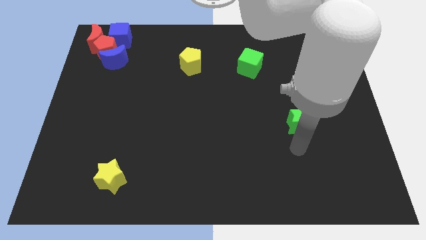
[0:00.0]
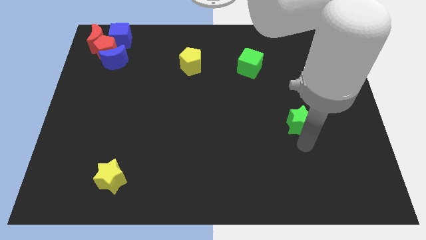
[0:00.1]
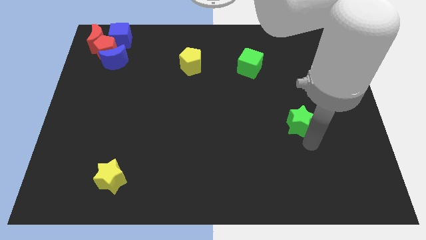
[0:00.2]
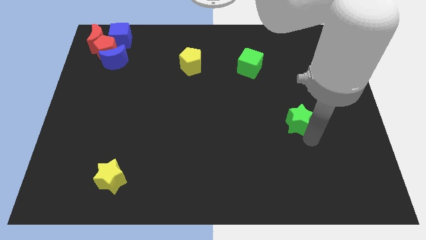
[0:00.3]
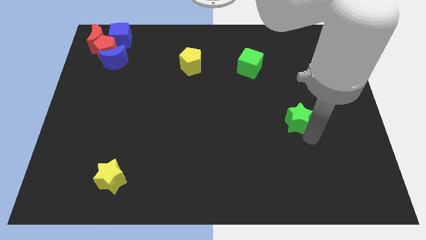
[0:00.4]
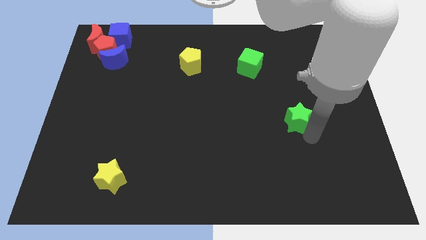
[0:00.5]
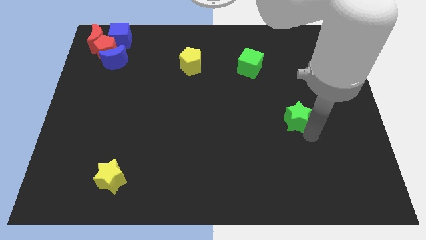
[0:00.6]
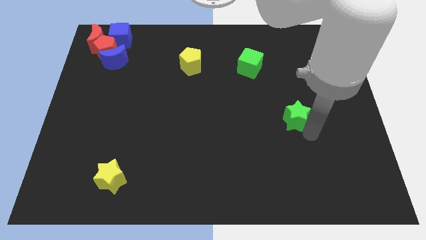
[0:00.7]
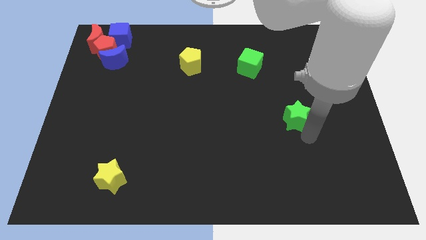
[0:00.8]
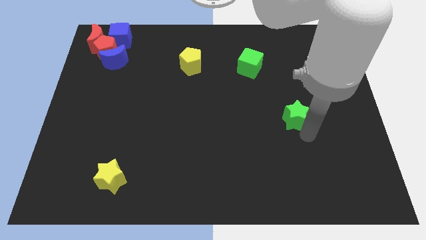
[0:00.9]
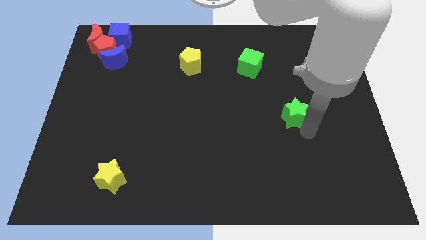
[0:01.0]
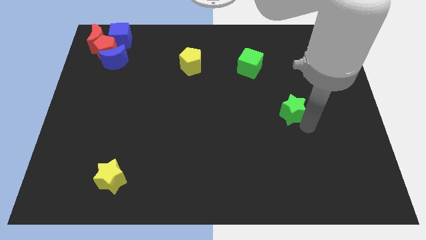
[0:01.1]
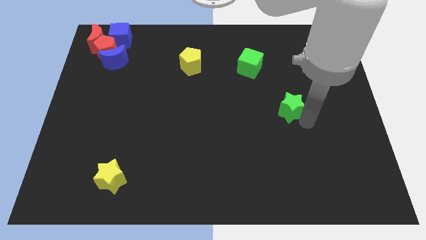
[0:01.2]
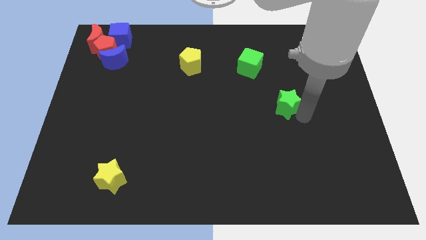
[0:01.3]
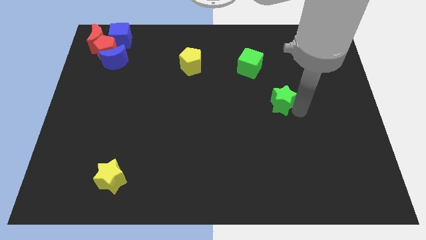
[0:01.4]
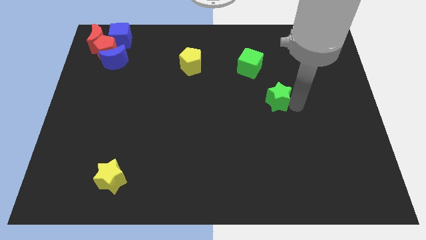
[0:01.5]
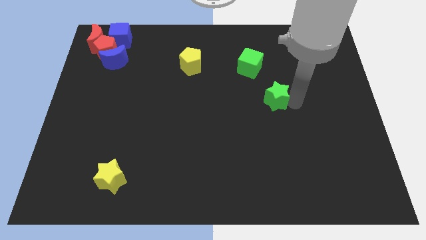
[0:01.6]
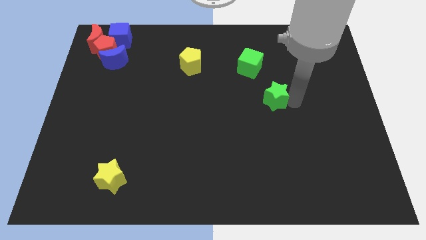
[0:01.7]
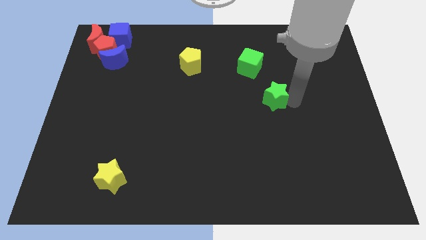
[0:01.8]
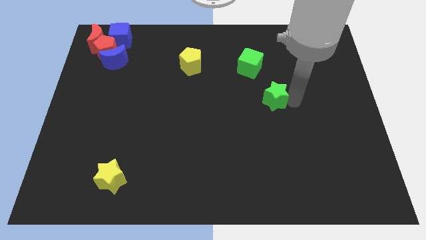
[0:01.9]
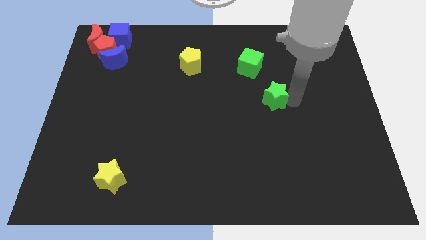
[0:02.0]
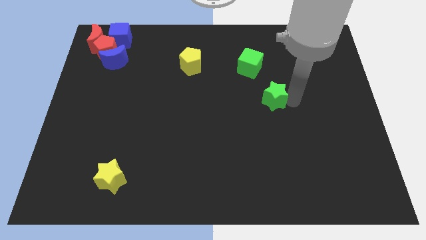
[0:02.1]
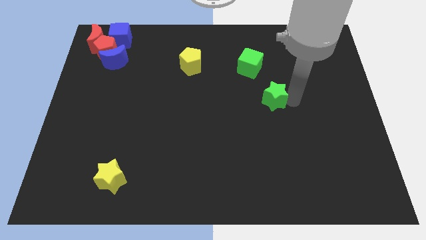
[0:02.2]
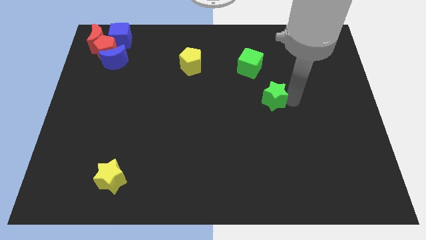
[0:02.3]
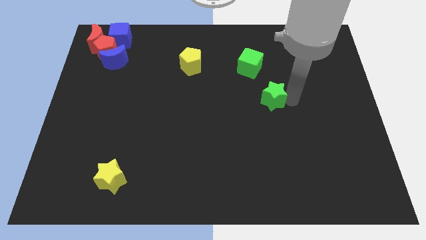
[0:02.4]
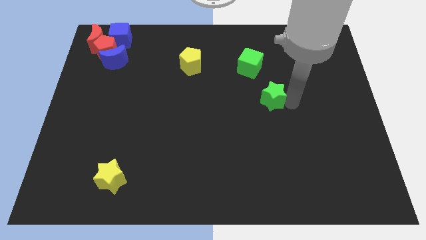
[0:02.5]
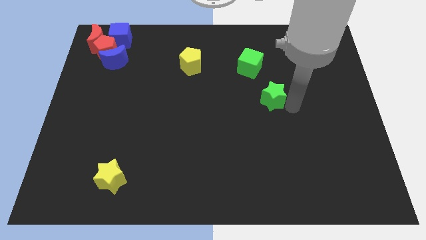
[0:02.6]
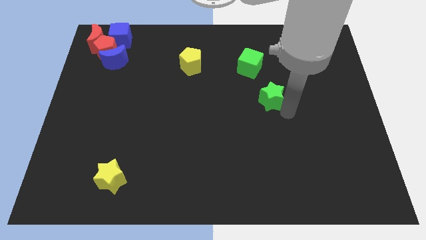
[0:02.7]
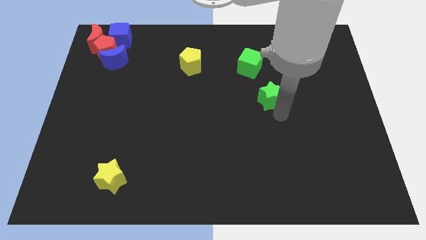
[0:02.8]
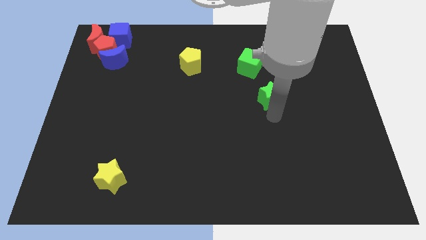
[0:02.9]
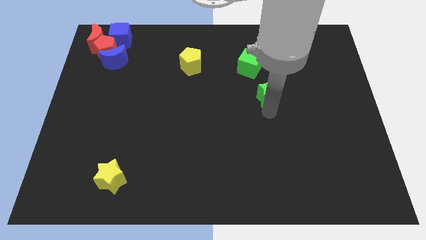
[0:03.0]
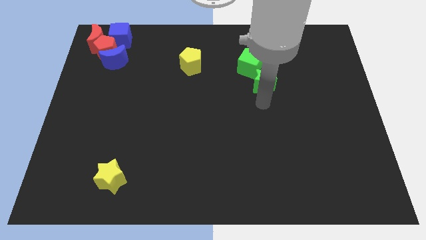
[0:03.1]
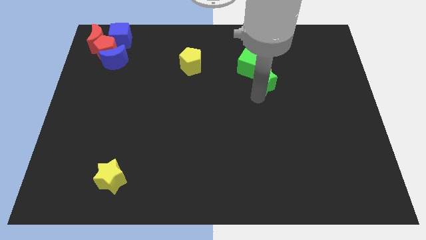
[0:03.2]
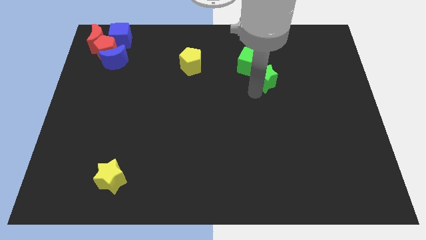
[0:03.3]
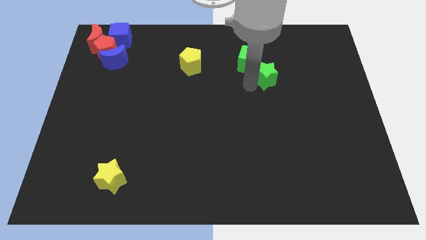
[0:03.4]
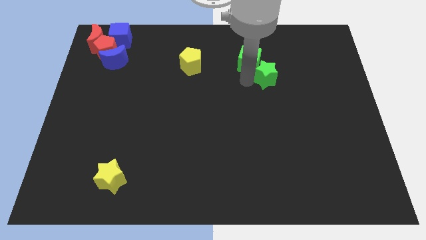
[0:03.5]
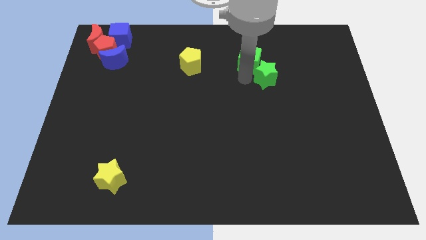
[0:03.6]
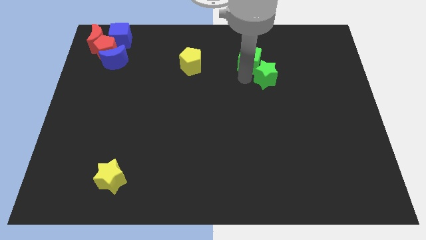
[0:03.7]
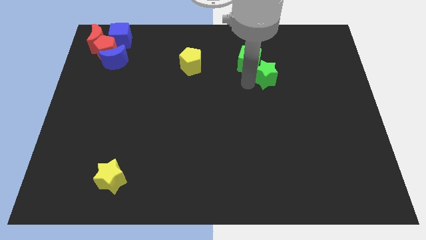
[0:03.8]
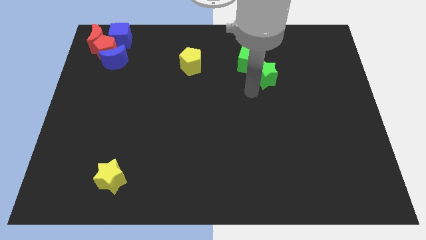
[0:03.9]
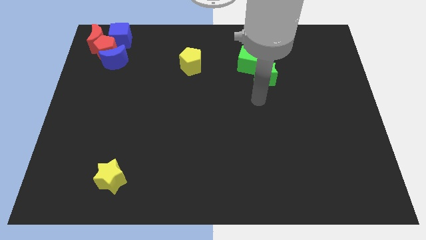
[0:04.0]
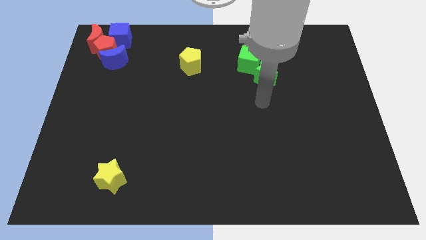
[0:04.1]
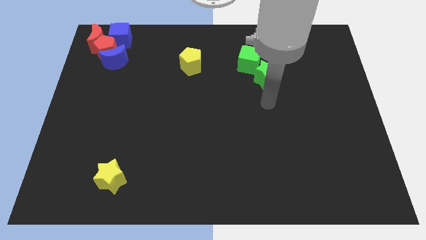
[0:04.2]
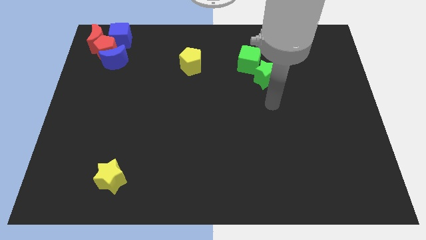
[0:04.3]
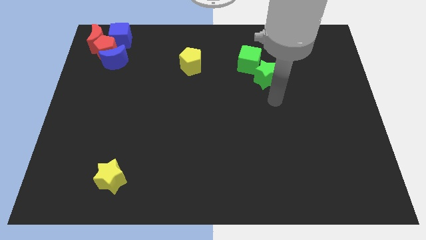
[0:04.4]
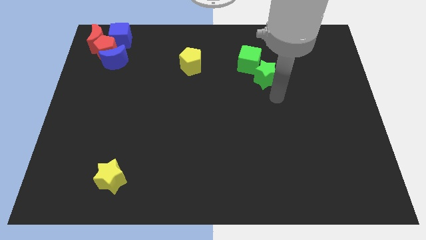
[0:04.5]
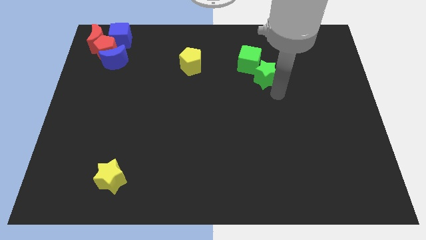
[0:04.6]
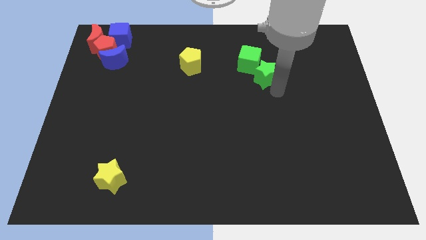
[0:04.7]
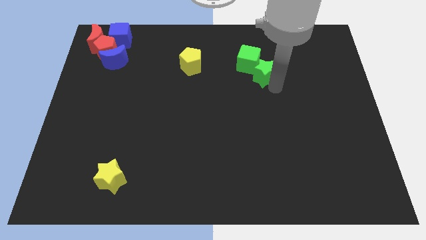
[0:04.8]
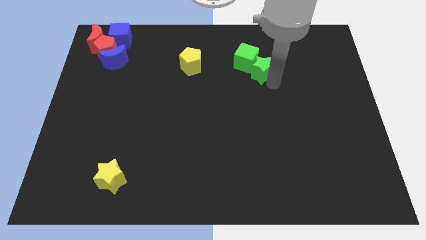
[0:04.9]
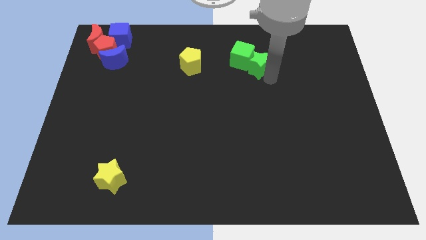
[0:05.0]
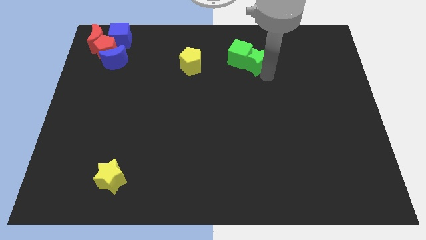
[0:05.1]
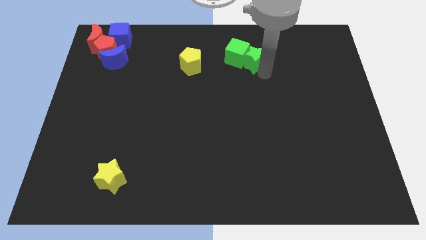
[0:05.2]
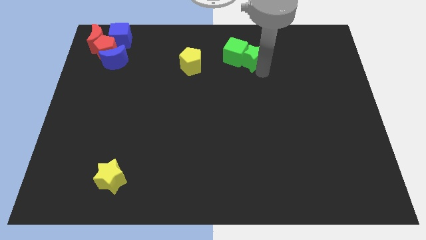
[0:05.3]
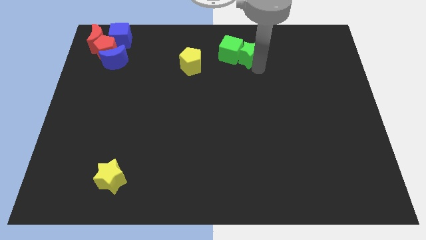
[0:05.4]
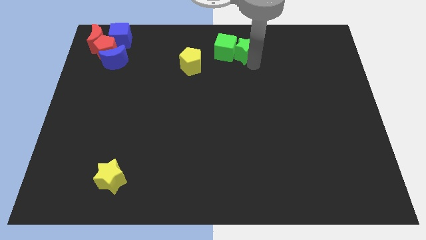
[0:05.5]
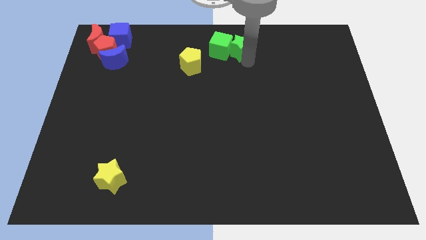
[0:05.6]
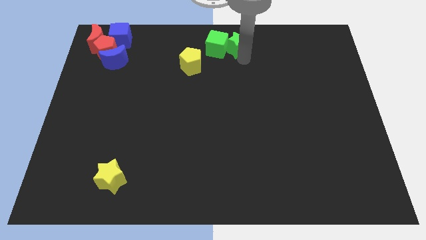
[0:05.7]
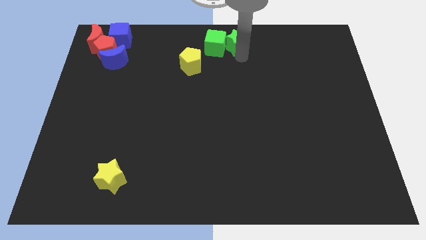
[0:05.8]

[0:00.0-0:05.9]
push green star and green cube towards the center of the board

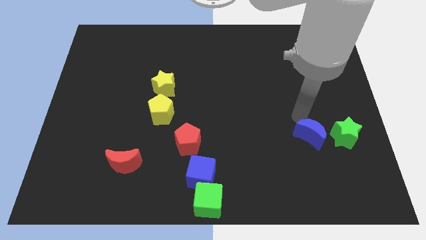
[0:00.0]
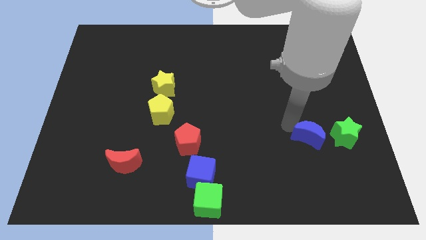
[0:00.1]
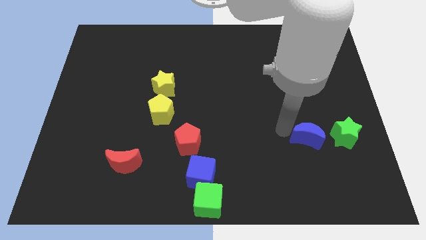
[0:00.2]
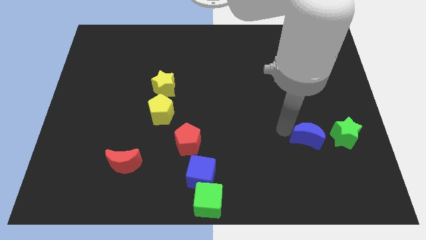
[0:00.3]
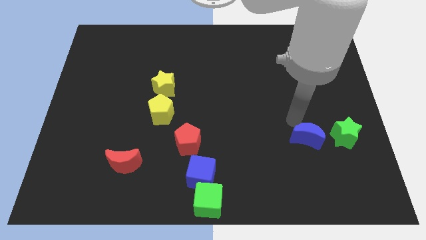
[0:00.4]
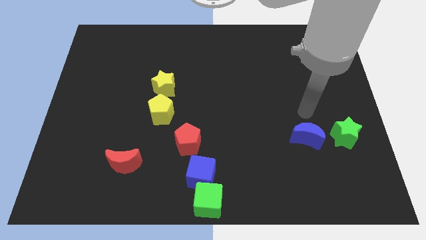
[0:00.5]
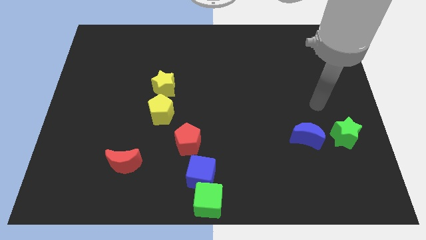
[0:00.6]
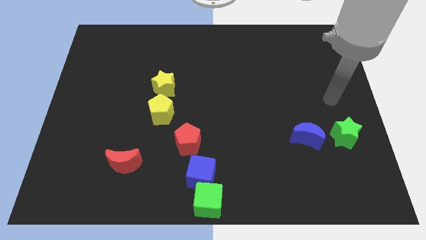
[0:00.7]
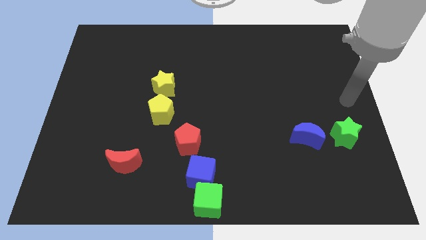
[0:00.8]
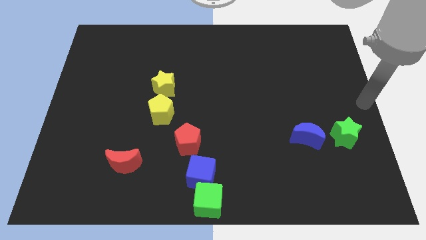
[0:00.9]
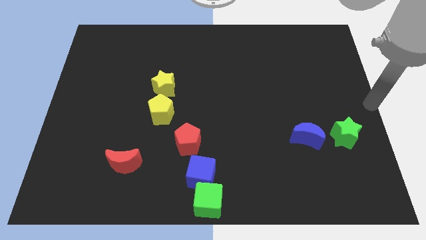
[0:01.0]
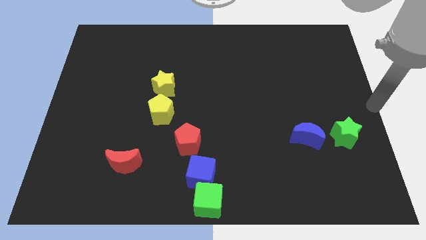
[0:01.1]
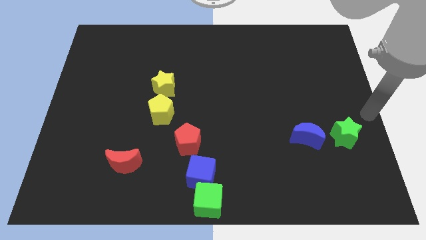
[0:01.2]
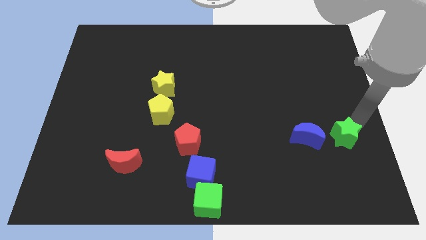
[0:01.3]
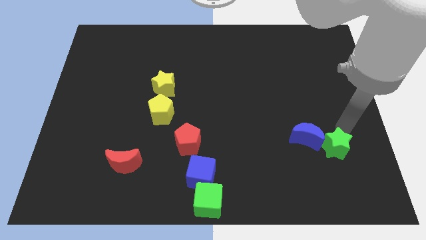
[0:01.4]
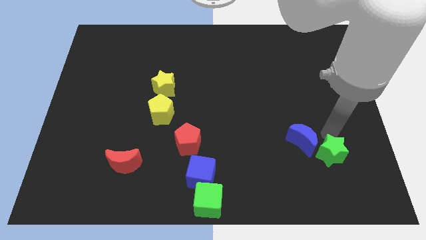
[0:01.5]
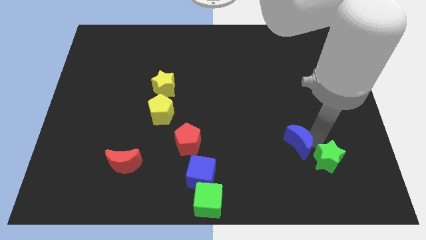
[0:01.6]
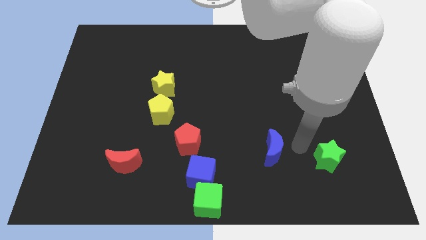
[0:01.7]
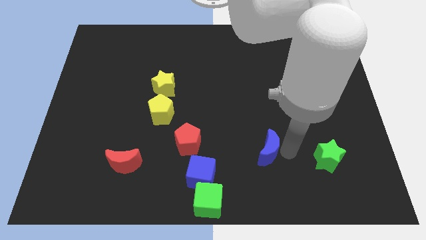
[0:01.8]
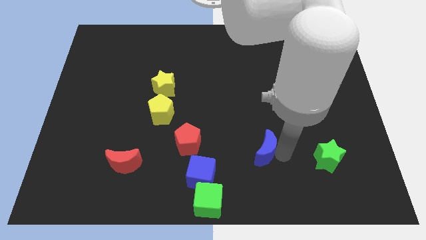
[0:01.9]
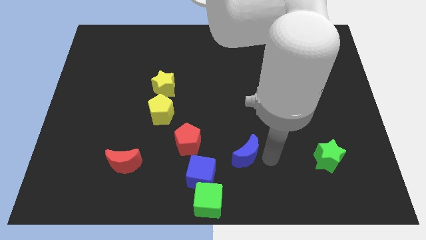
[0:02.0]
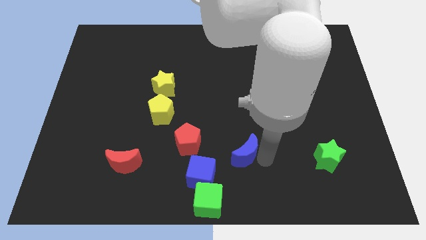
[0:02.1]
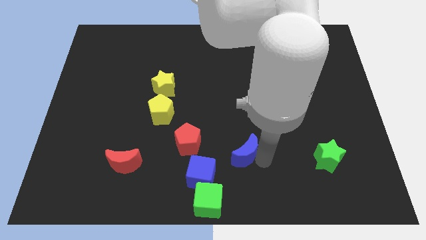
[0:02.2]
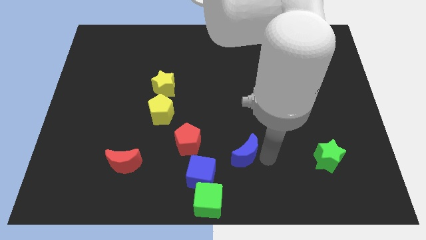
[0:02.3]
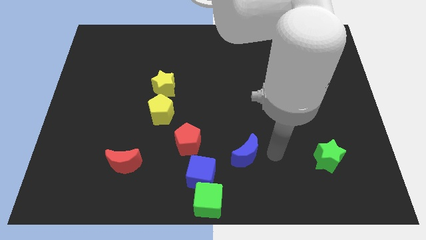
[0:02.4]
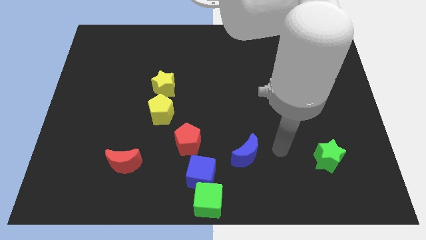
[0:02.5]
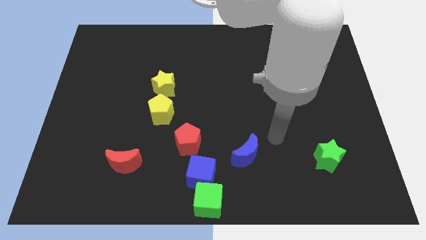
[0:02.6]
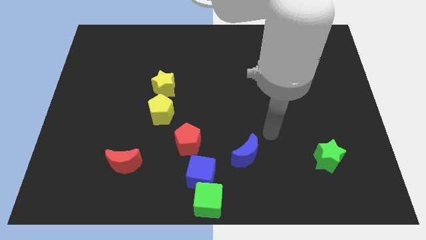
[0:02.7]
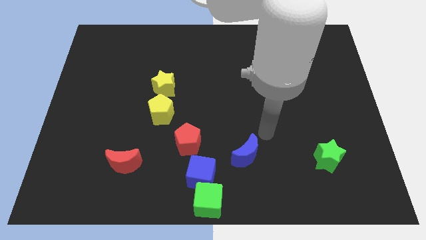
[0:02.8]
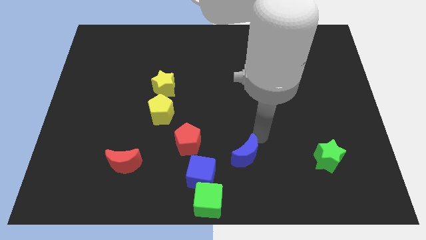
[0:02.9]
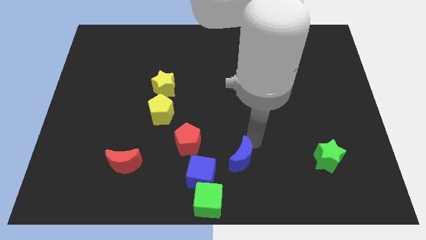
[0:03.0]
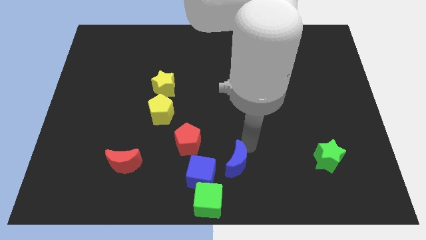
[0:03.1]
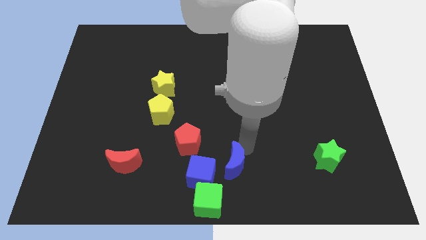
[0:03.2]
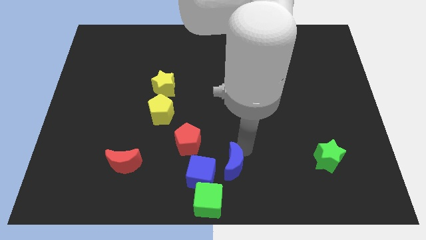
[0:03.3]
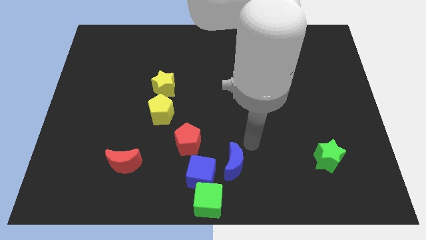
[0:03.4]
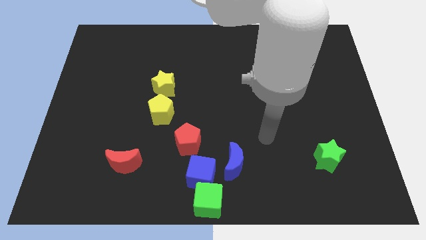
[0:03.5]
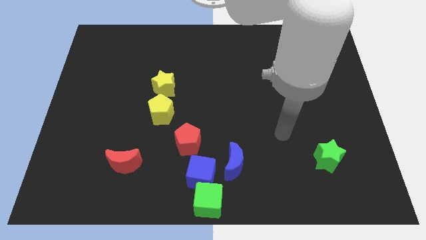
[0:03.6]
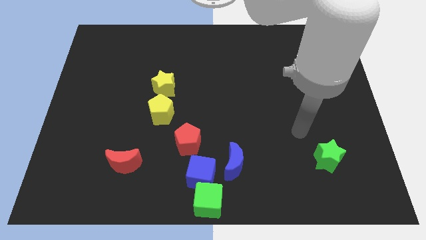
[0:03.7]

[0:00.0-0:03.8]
move the blue crescent at the right side of the blue cube
